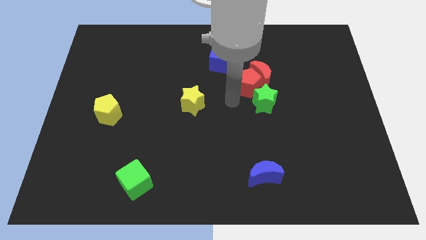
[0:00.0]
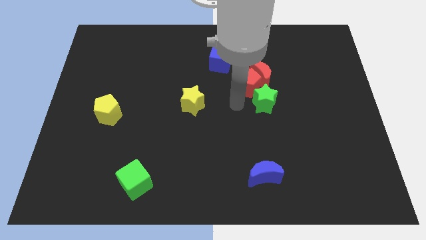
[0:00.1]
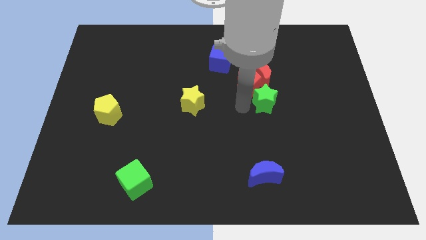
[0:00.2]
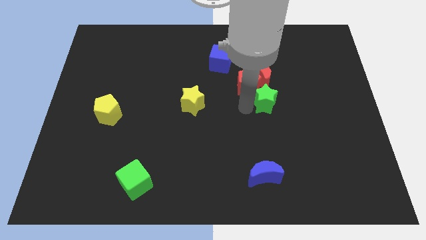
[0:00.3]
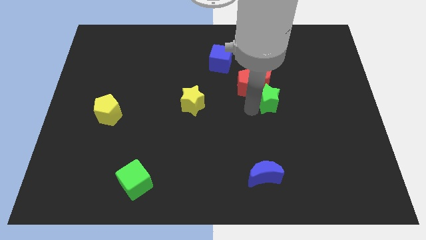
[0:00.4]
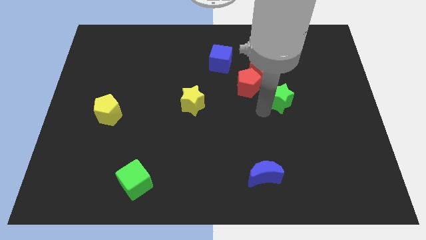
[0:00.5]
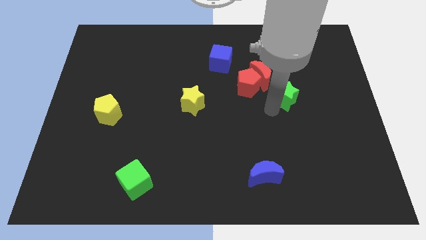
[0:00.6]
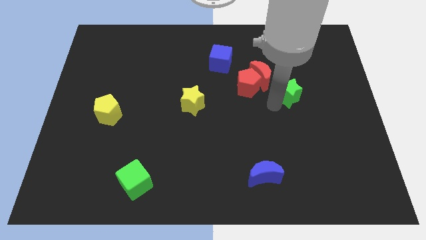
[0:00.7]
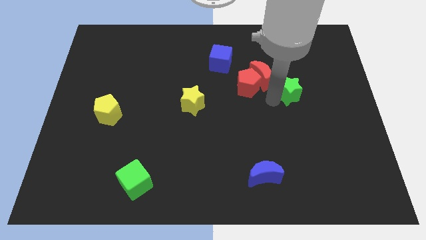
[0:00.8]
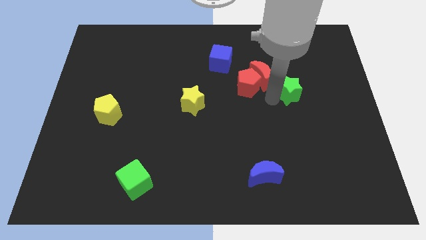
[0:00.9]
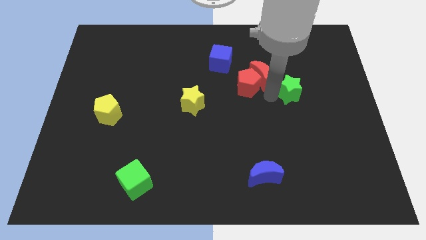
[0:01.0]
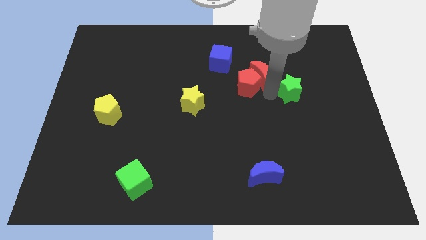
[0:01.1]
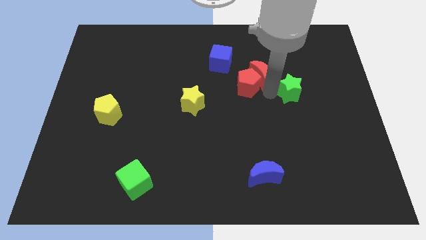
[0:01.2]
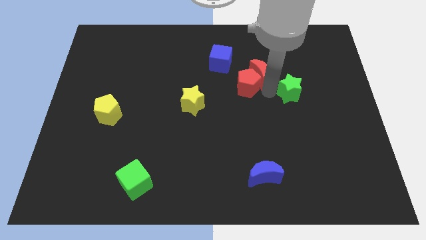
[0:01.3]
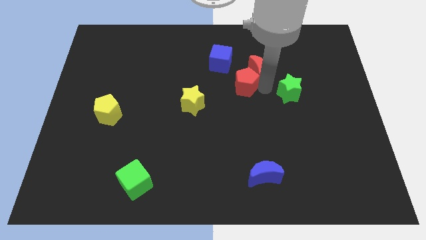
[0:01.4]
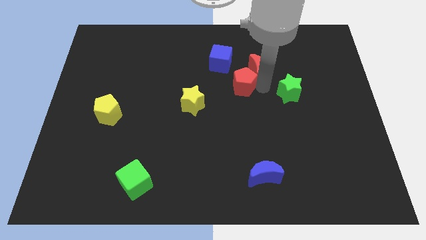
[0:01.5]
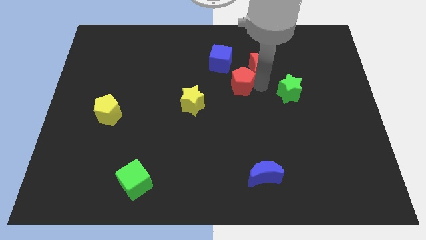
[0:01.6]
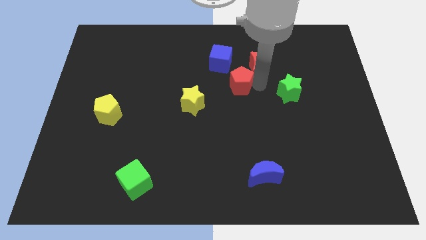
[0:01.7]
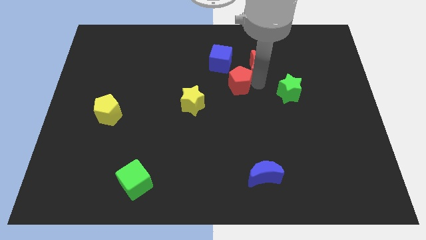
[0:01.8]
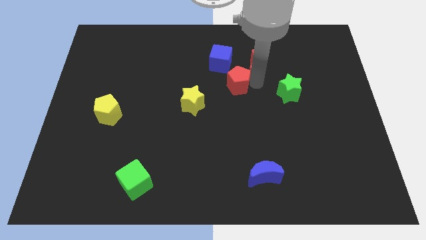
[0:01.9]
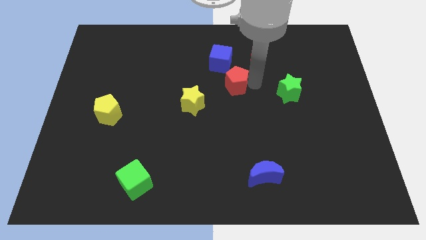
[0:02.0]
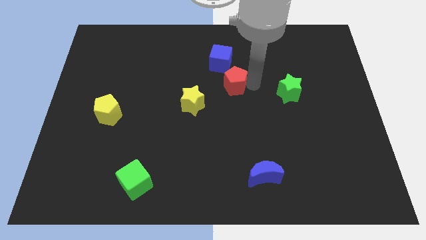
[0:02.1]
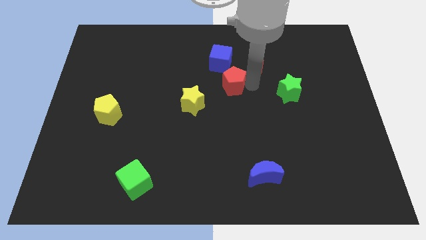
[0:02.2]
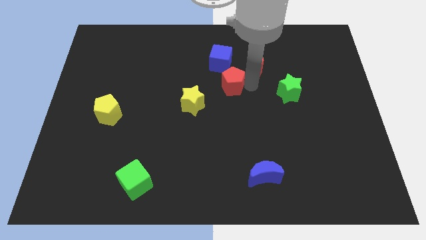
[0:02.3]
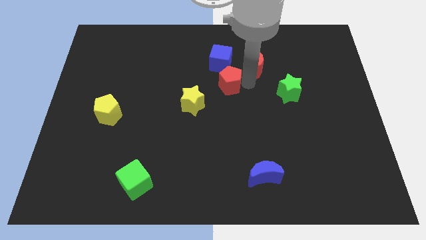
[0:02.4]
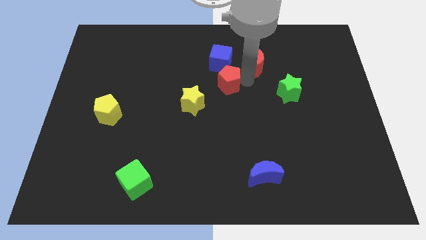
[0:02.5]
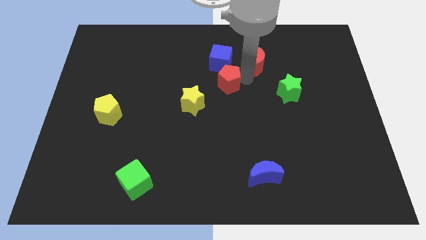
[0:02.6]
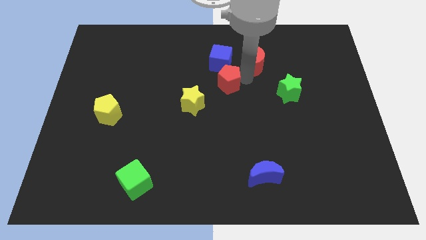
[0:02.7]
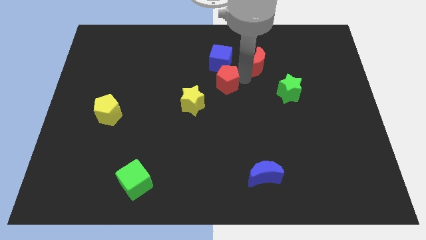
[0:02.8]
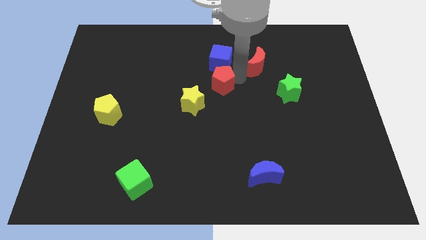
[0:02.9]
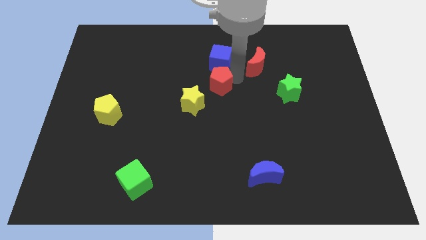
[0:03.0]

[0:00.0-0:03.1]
separate red pentagon and red moon

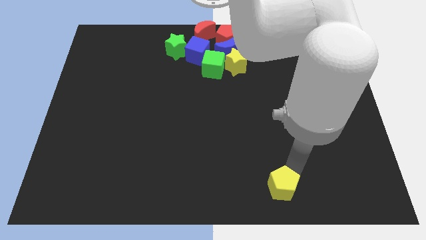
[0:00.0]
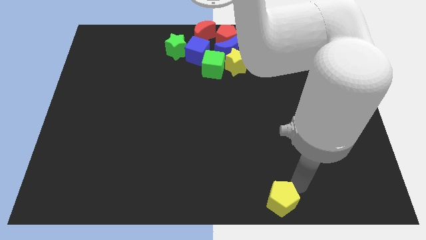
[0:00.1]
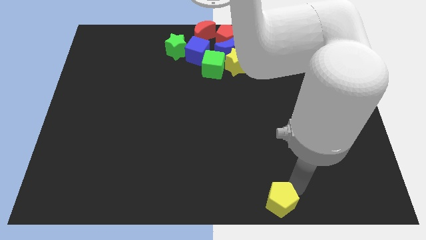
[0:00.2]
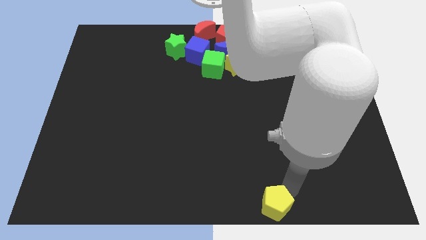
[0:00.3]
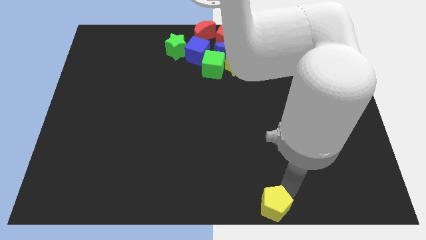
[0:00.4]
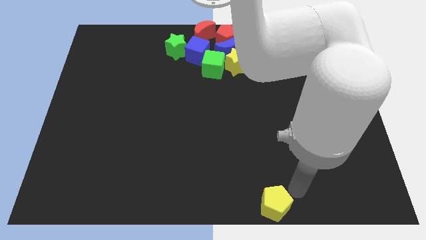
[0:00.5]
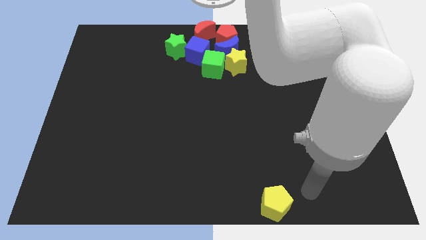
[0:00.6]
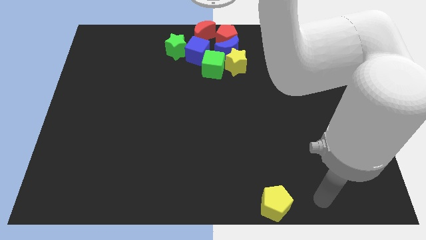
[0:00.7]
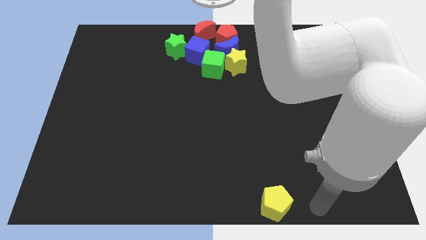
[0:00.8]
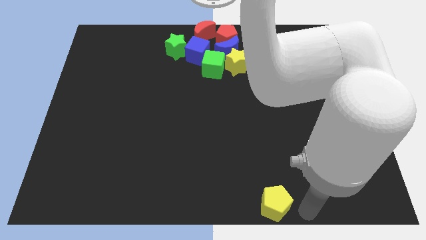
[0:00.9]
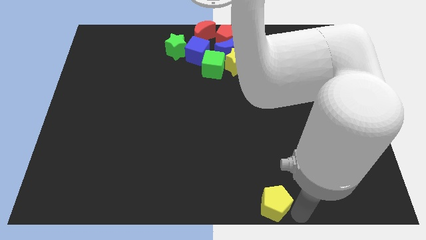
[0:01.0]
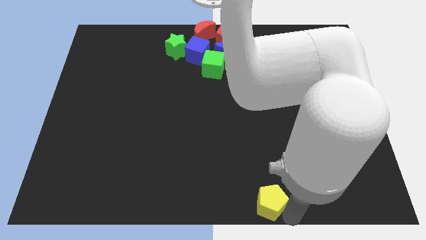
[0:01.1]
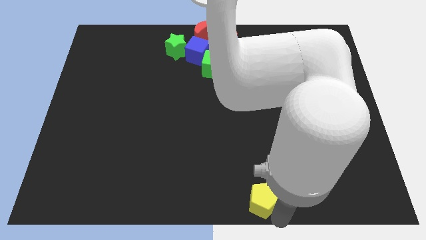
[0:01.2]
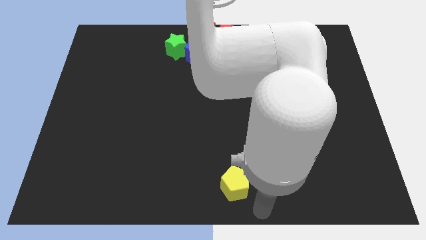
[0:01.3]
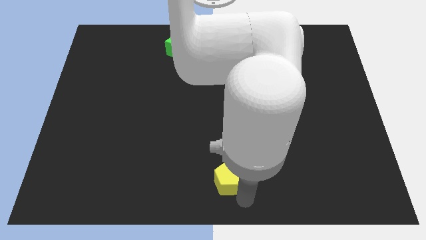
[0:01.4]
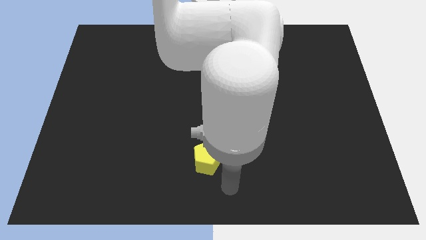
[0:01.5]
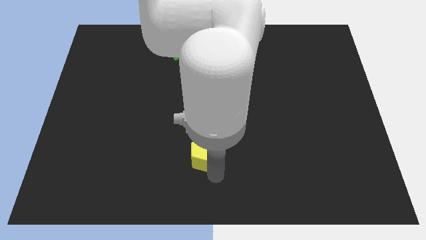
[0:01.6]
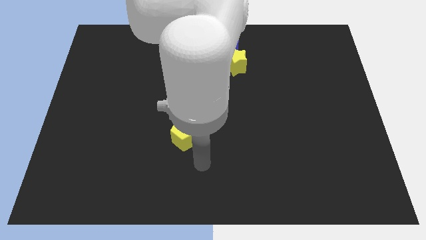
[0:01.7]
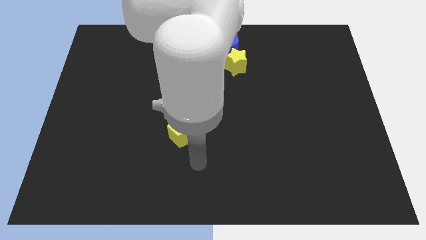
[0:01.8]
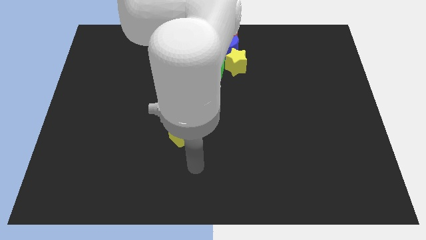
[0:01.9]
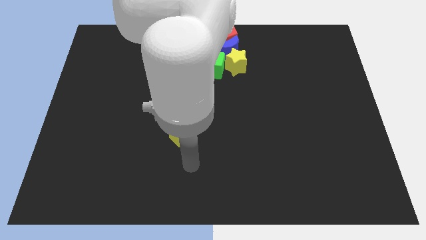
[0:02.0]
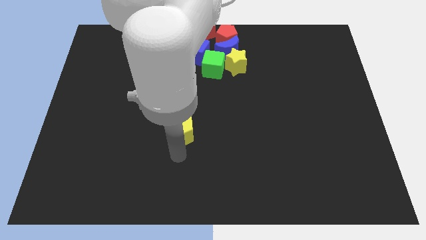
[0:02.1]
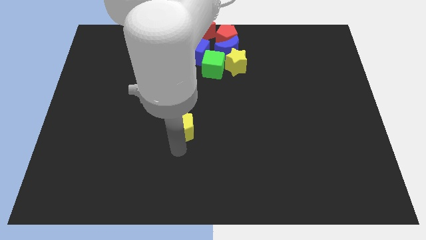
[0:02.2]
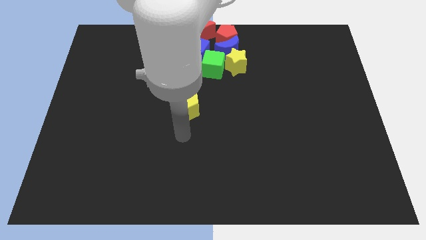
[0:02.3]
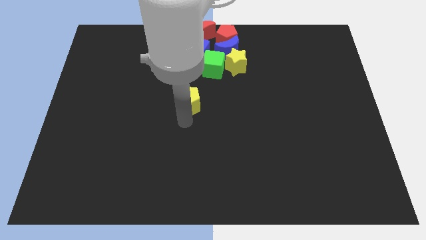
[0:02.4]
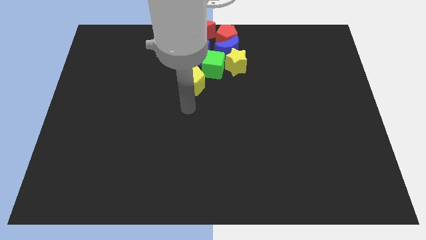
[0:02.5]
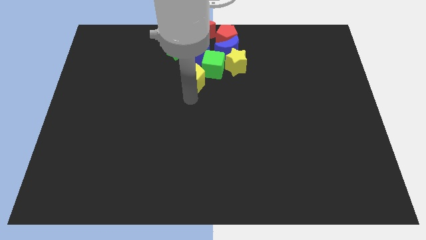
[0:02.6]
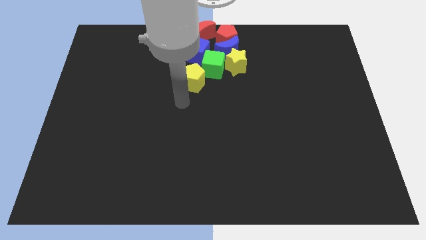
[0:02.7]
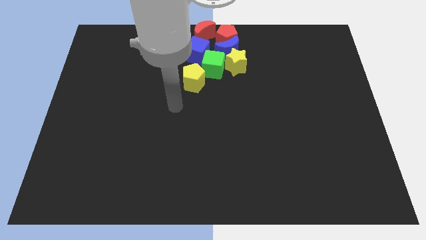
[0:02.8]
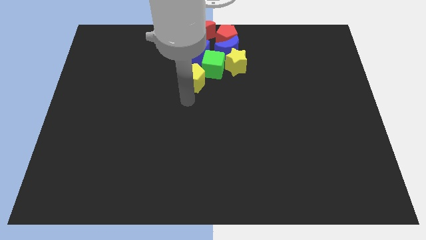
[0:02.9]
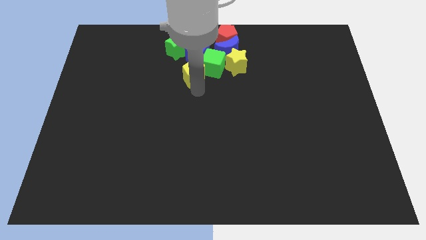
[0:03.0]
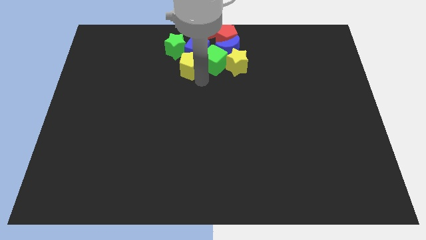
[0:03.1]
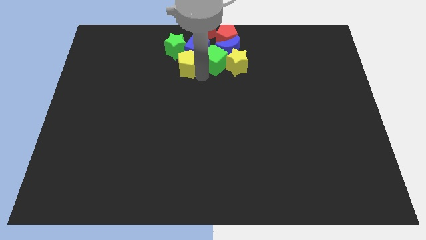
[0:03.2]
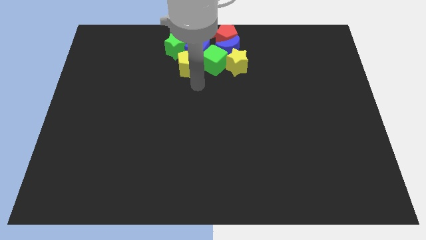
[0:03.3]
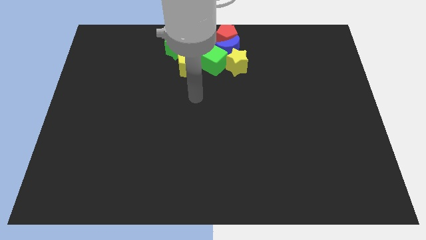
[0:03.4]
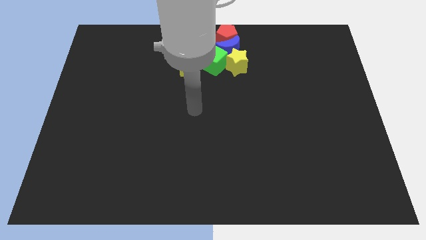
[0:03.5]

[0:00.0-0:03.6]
move the yellow pentagon into the group of blocks

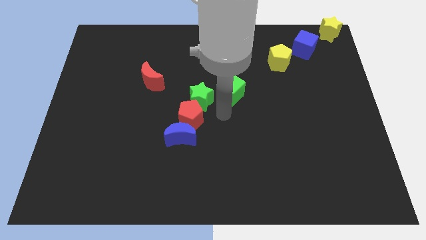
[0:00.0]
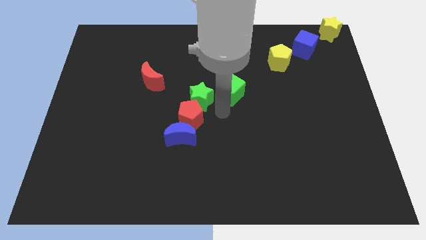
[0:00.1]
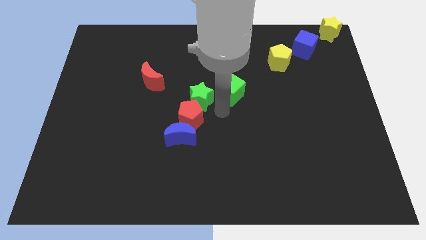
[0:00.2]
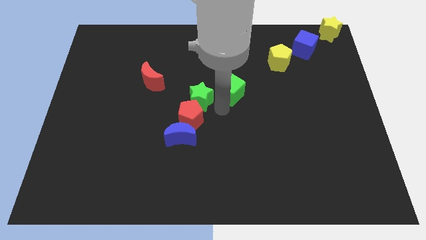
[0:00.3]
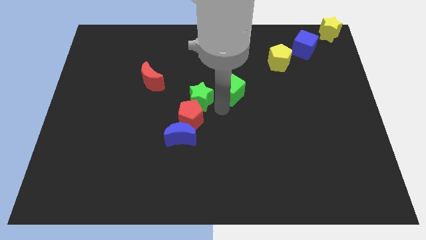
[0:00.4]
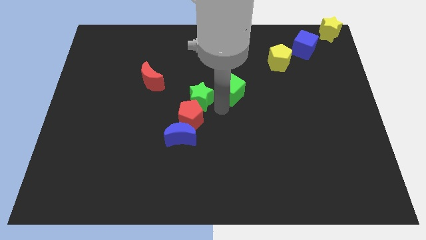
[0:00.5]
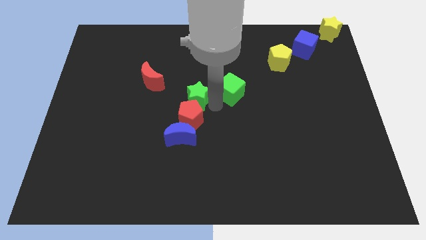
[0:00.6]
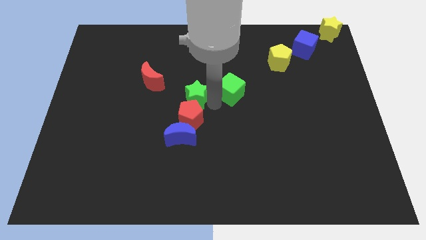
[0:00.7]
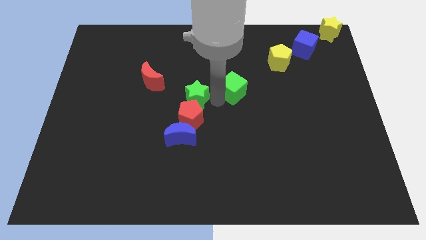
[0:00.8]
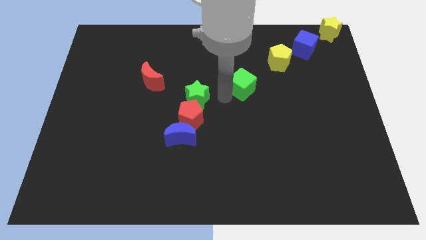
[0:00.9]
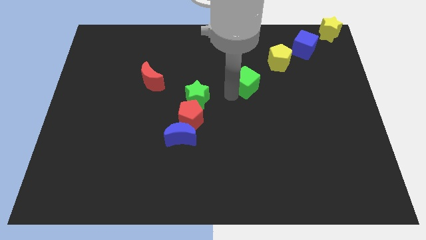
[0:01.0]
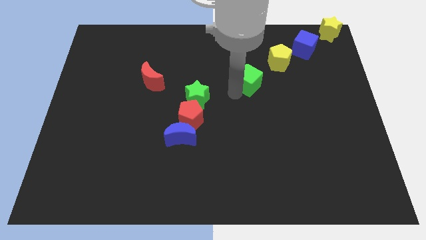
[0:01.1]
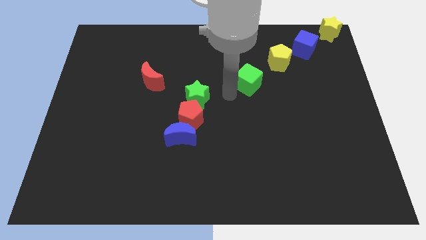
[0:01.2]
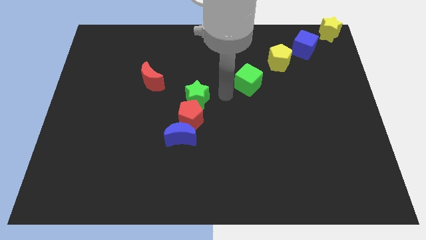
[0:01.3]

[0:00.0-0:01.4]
place the green cube below yellow pentagon

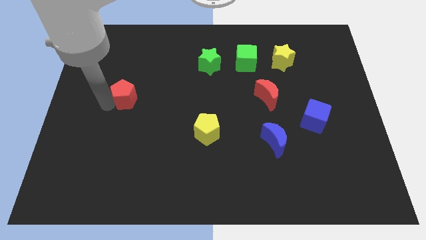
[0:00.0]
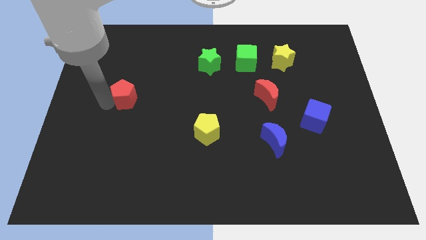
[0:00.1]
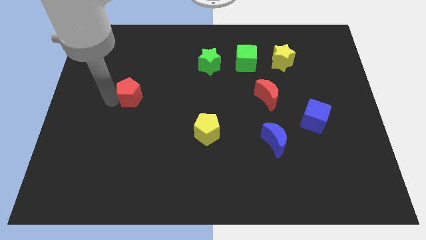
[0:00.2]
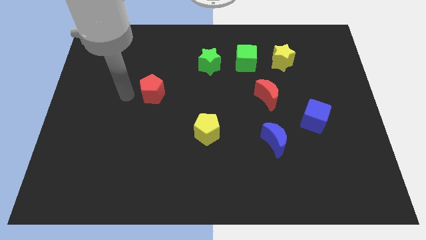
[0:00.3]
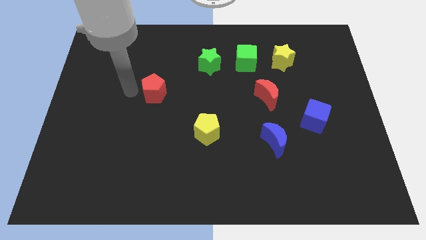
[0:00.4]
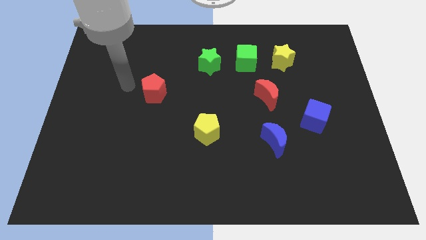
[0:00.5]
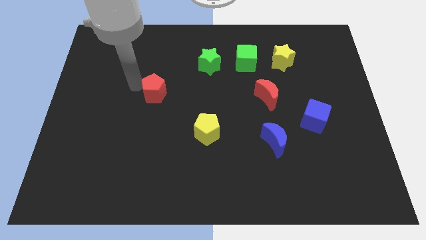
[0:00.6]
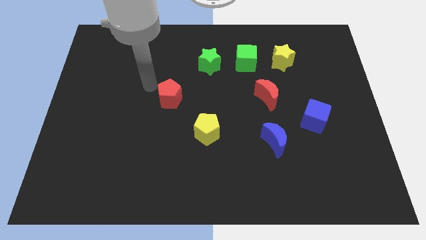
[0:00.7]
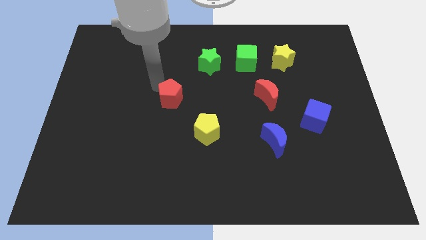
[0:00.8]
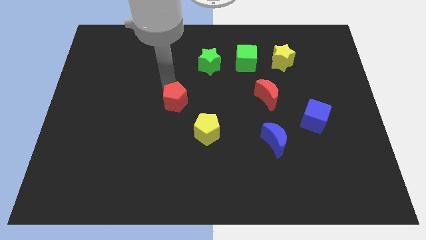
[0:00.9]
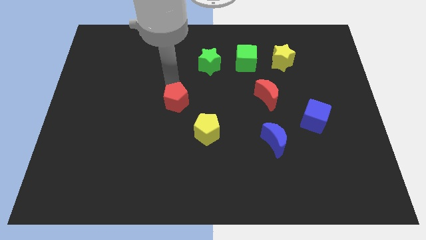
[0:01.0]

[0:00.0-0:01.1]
place the red pentagon diagonal to the green star
